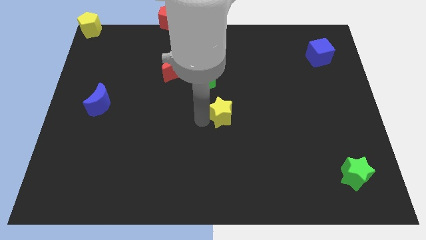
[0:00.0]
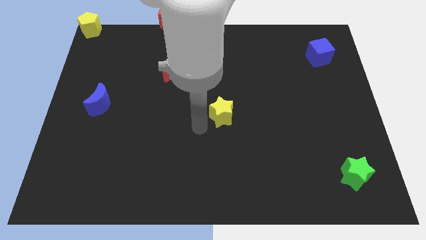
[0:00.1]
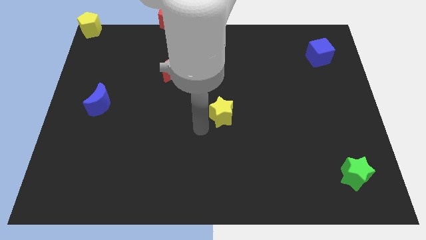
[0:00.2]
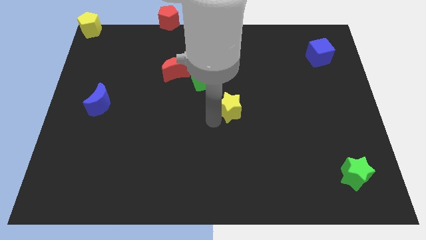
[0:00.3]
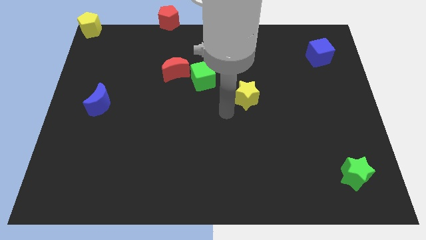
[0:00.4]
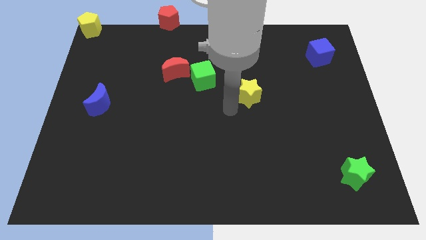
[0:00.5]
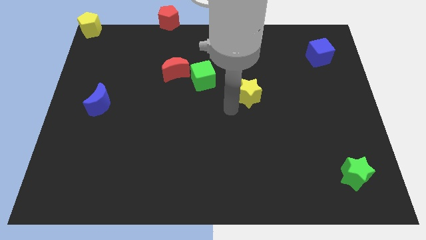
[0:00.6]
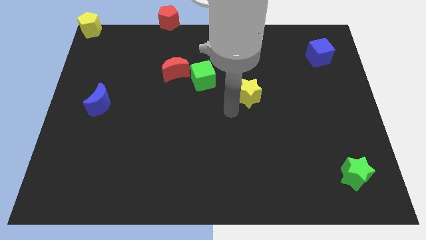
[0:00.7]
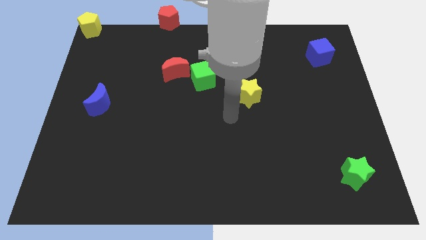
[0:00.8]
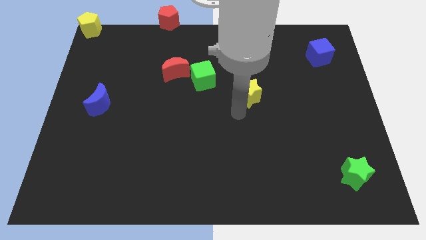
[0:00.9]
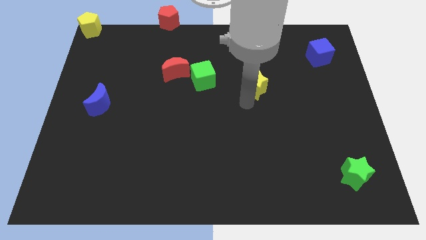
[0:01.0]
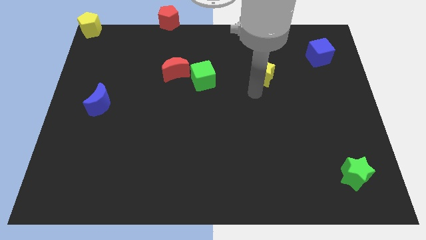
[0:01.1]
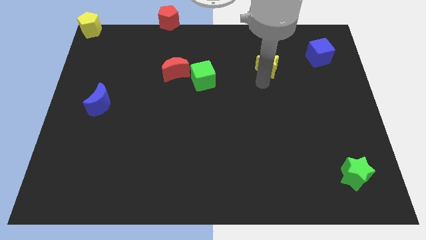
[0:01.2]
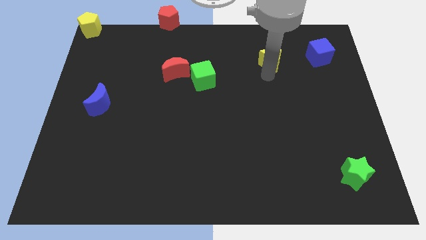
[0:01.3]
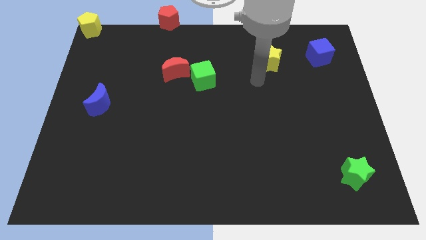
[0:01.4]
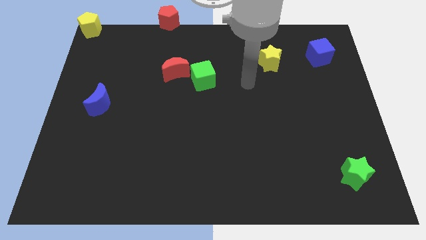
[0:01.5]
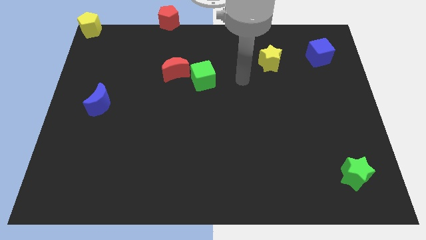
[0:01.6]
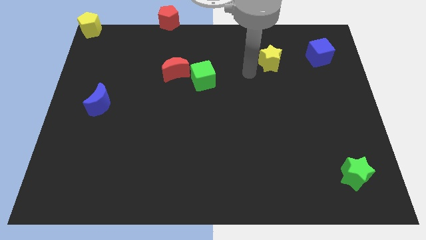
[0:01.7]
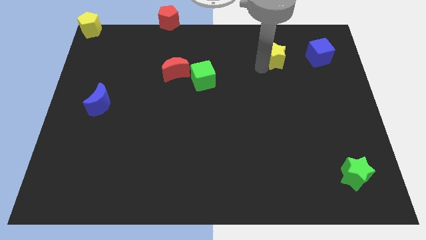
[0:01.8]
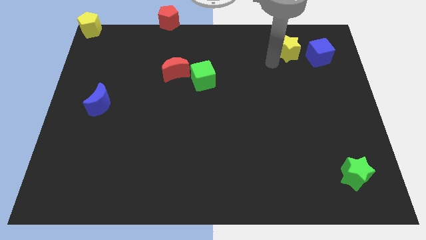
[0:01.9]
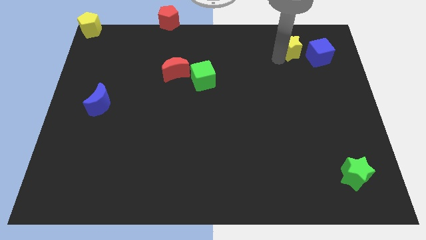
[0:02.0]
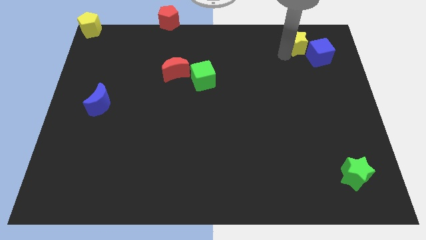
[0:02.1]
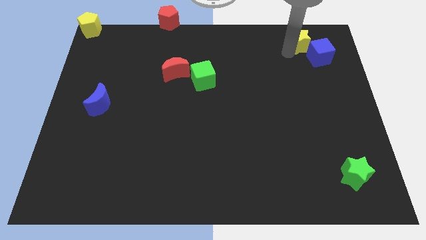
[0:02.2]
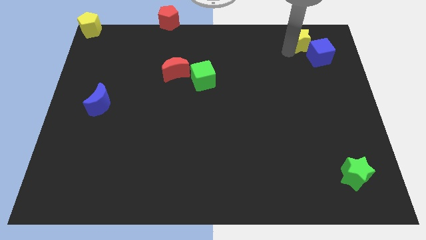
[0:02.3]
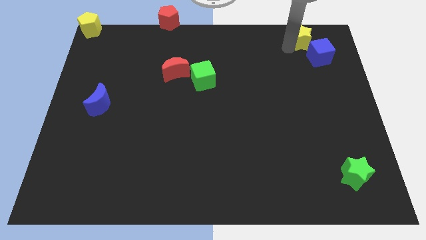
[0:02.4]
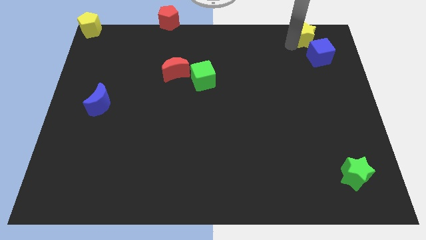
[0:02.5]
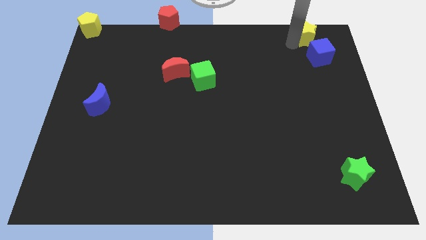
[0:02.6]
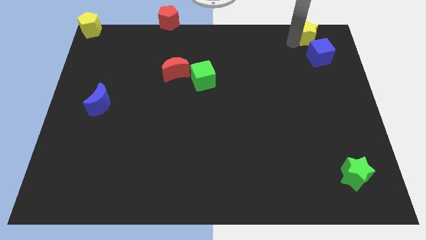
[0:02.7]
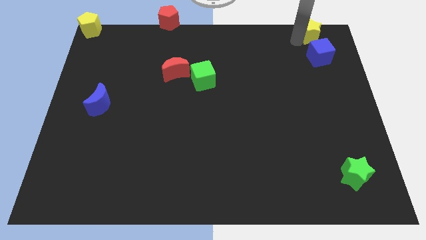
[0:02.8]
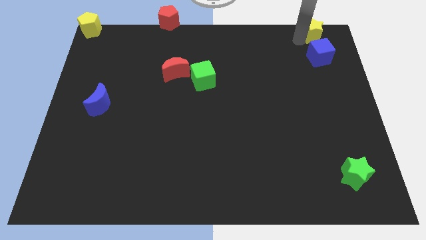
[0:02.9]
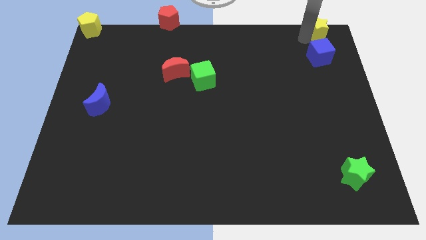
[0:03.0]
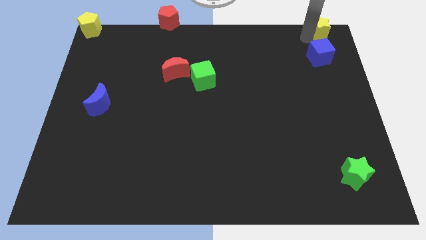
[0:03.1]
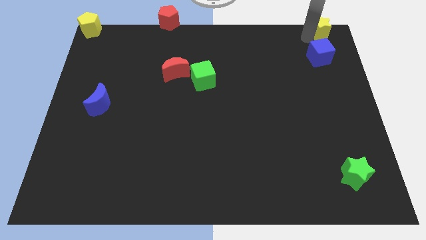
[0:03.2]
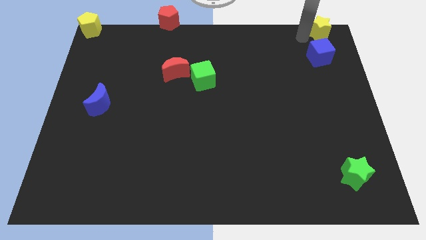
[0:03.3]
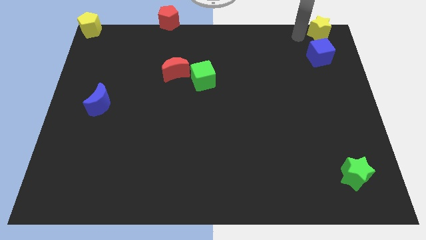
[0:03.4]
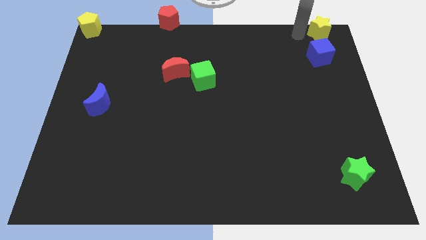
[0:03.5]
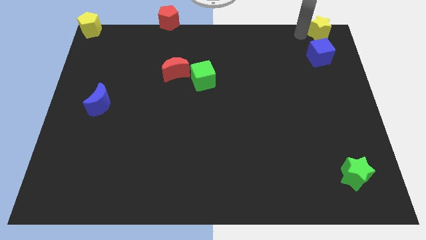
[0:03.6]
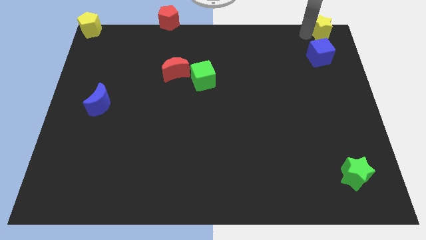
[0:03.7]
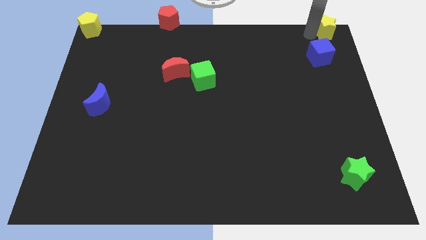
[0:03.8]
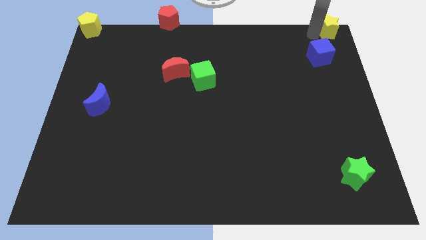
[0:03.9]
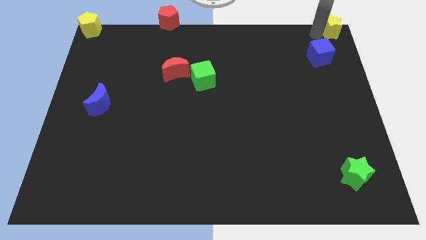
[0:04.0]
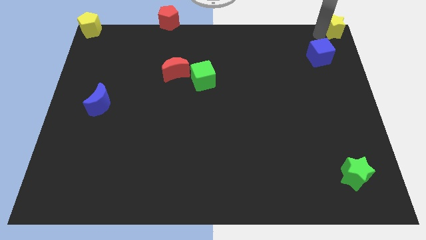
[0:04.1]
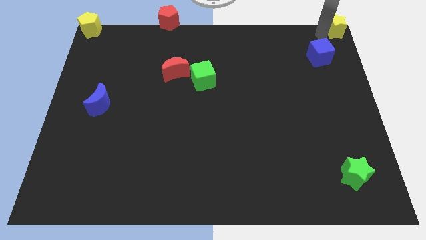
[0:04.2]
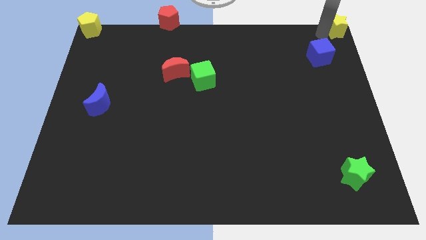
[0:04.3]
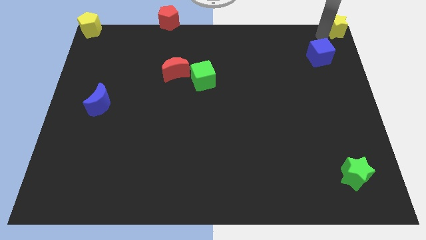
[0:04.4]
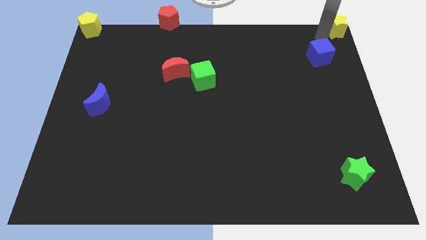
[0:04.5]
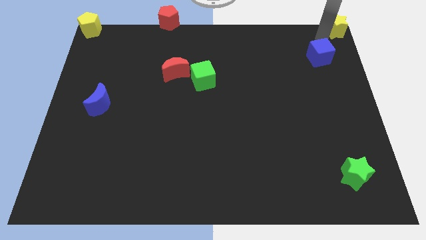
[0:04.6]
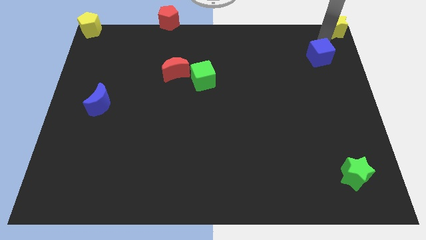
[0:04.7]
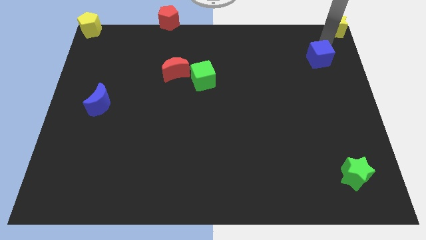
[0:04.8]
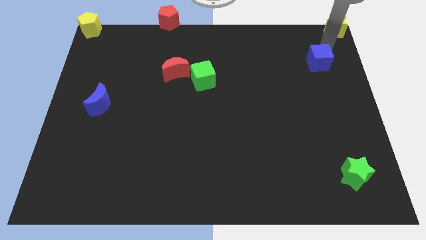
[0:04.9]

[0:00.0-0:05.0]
push the yellow star to the top right corner

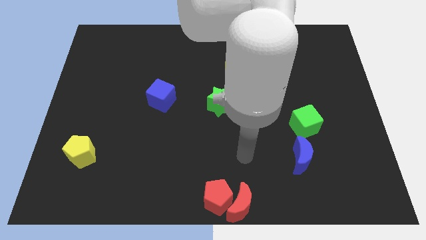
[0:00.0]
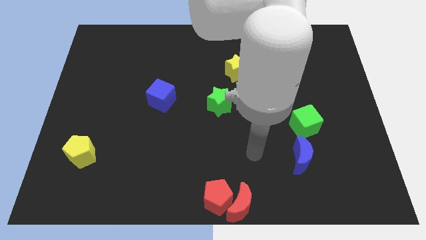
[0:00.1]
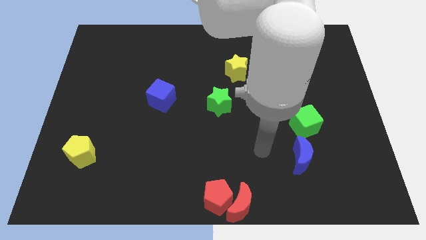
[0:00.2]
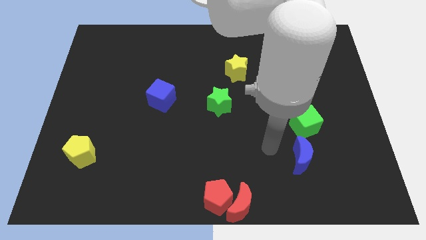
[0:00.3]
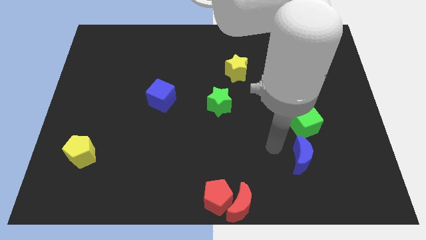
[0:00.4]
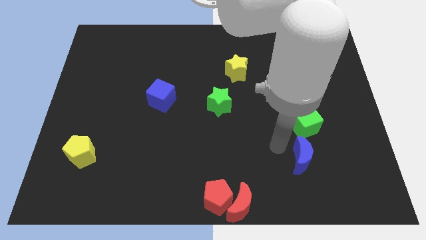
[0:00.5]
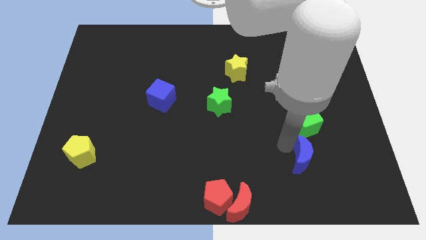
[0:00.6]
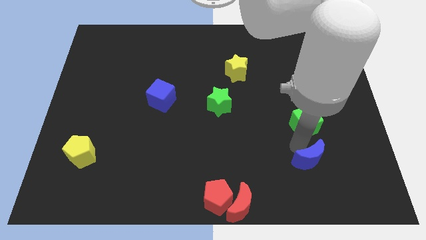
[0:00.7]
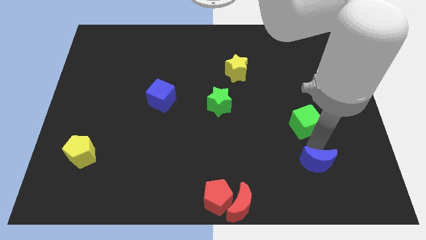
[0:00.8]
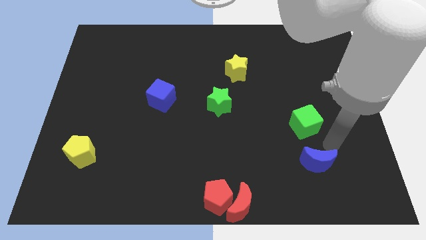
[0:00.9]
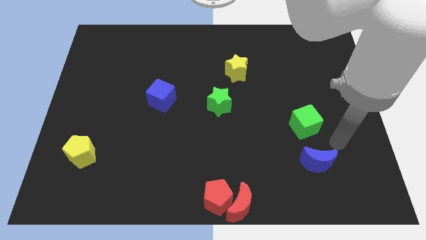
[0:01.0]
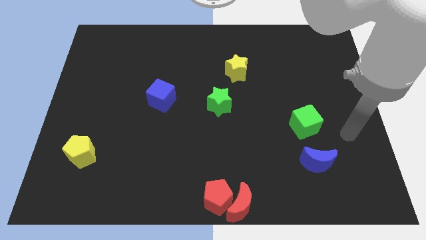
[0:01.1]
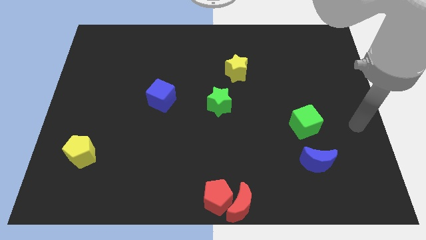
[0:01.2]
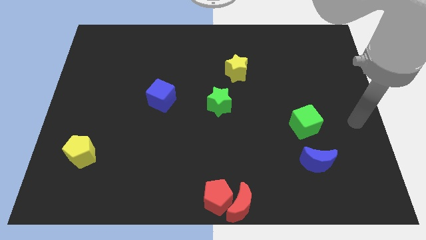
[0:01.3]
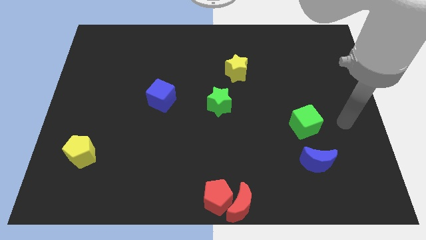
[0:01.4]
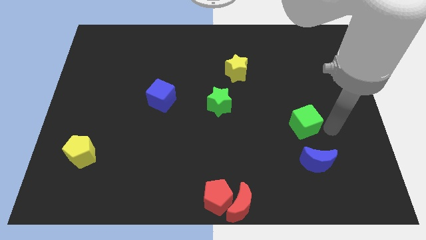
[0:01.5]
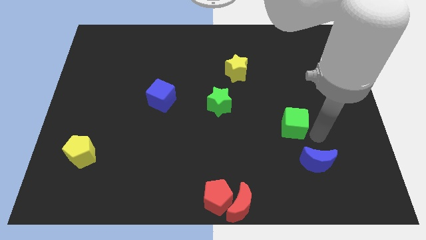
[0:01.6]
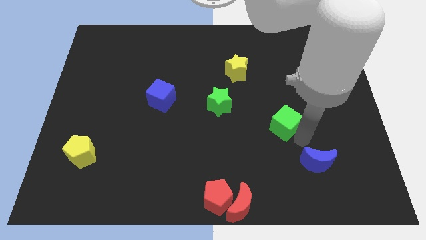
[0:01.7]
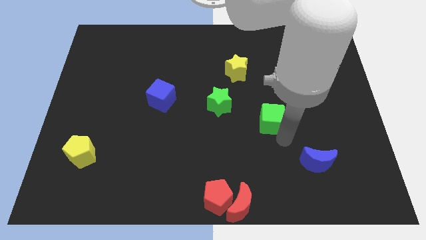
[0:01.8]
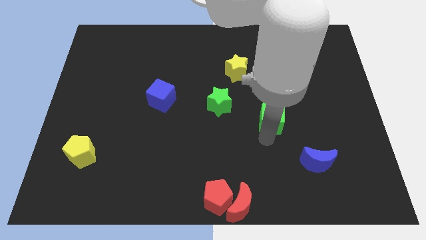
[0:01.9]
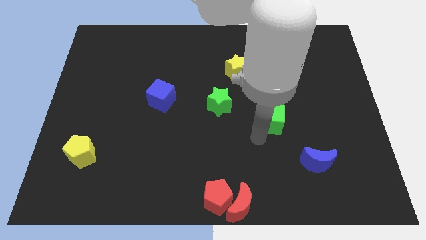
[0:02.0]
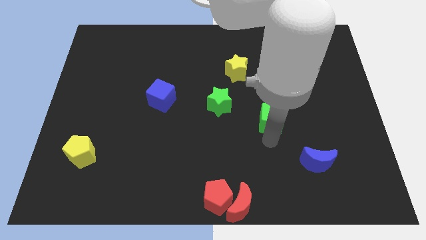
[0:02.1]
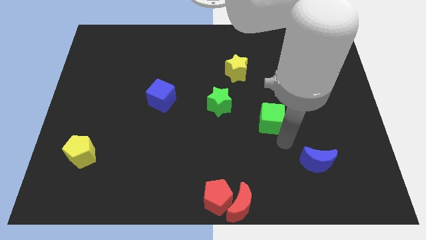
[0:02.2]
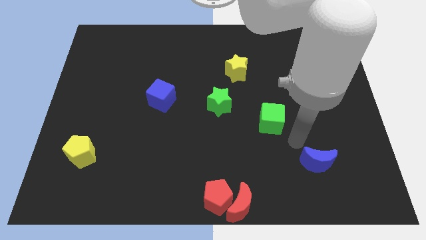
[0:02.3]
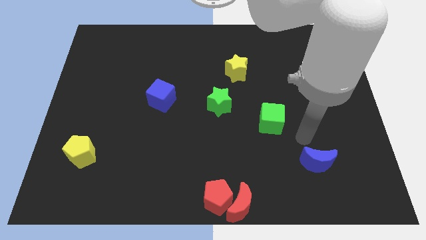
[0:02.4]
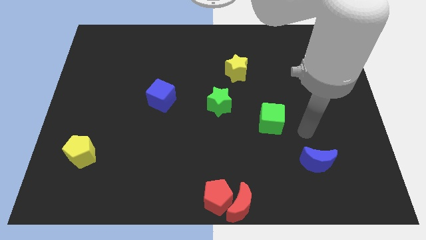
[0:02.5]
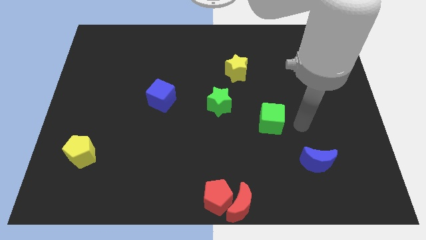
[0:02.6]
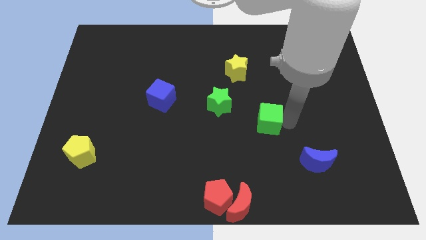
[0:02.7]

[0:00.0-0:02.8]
place the green cube between the green star and blue moon

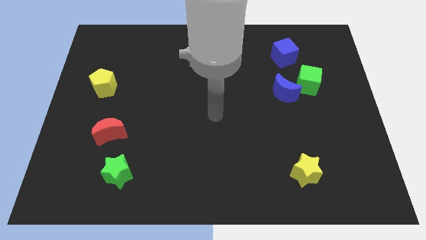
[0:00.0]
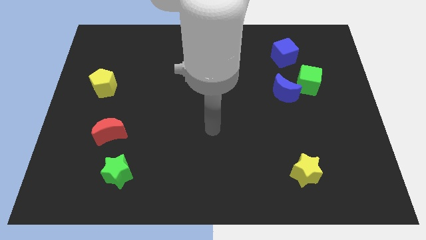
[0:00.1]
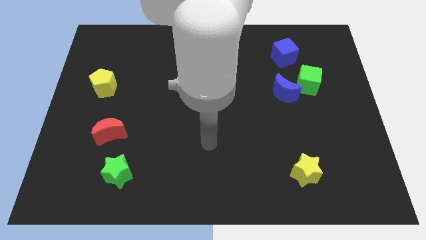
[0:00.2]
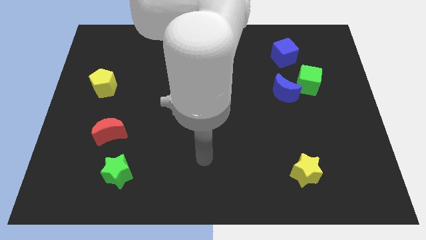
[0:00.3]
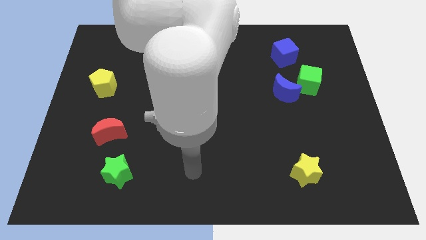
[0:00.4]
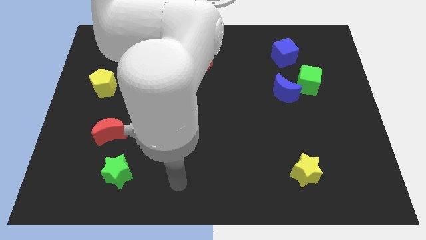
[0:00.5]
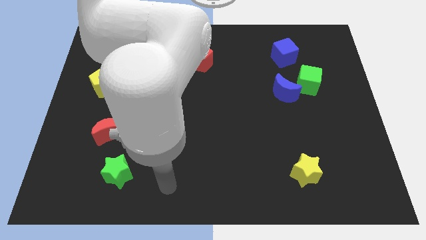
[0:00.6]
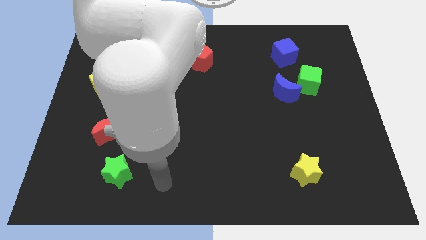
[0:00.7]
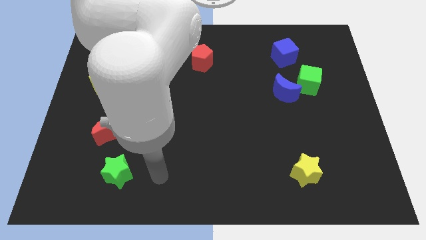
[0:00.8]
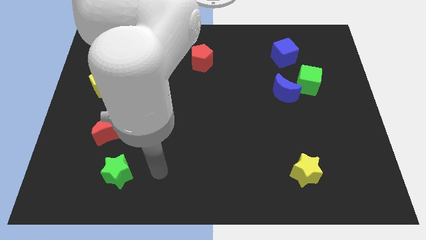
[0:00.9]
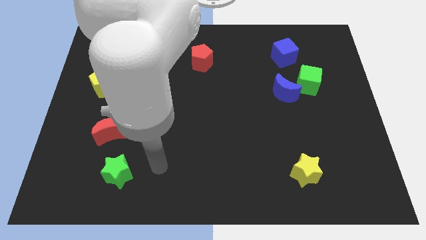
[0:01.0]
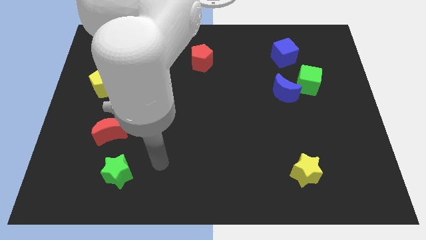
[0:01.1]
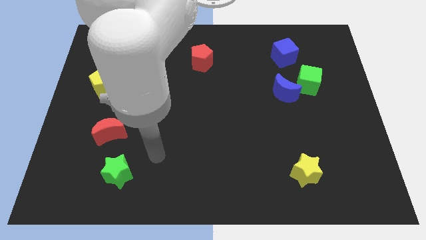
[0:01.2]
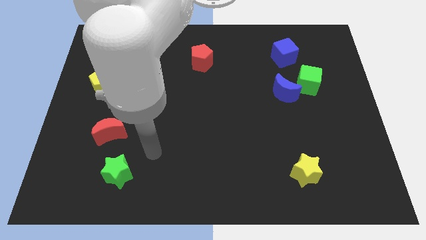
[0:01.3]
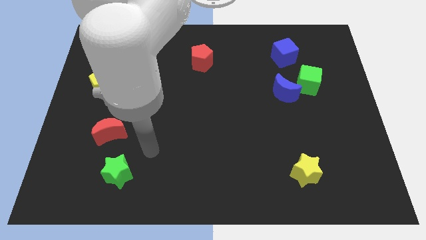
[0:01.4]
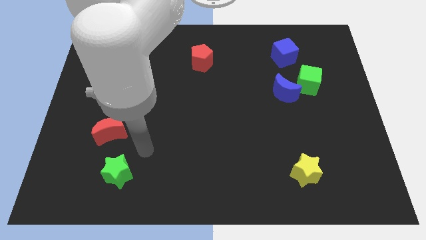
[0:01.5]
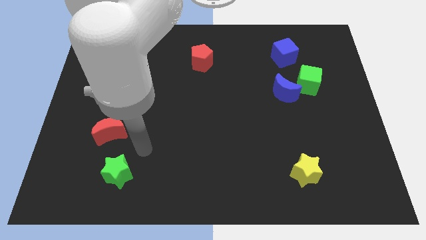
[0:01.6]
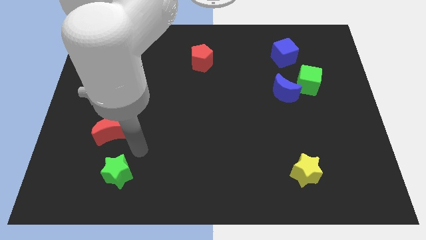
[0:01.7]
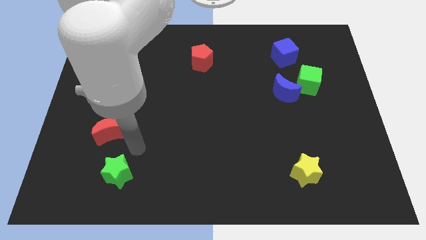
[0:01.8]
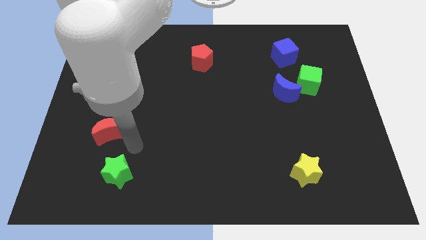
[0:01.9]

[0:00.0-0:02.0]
point the arm above the green star
